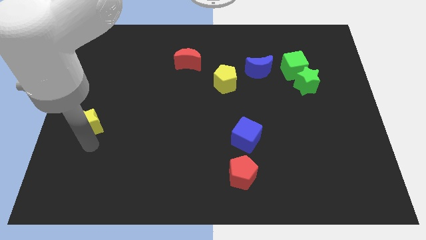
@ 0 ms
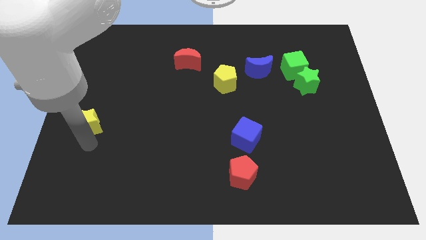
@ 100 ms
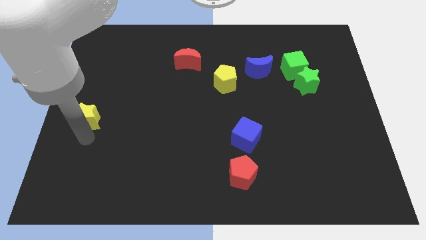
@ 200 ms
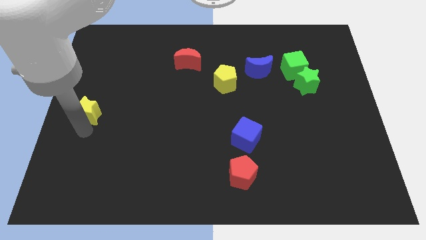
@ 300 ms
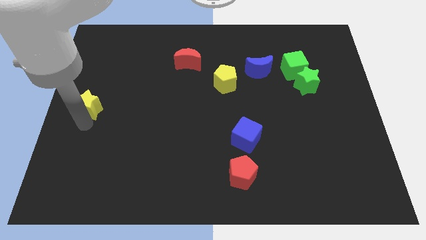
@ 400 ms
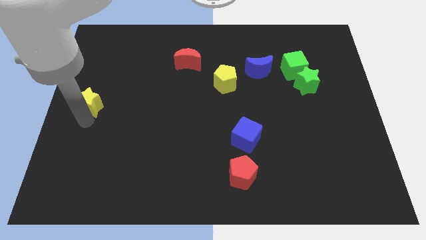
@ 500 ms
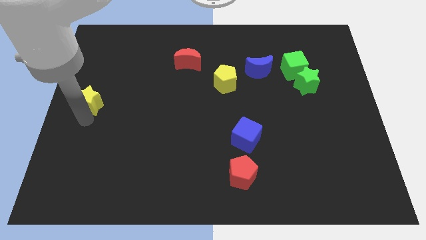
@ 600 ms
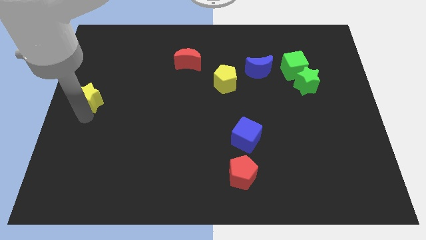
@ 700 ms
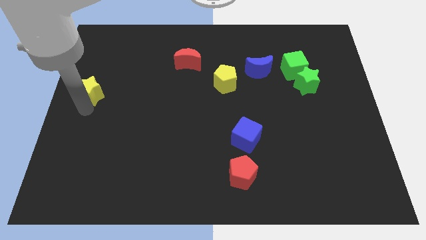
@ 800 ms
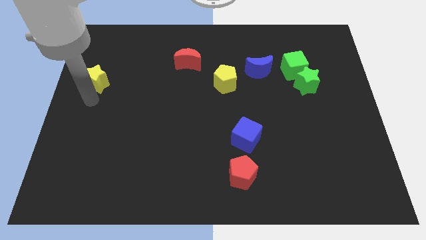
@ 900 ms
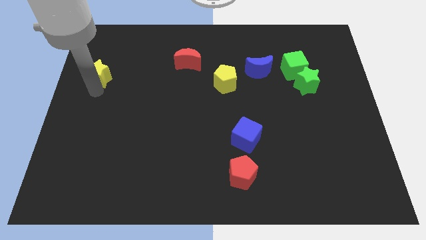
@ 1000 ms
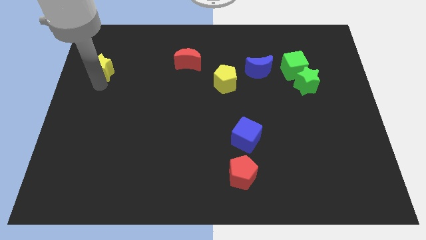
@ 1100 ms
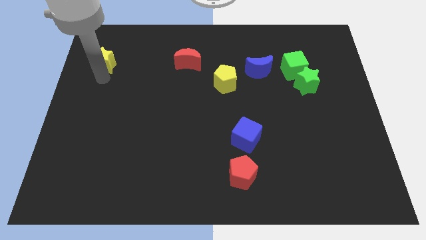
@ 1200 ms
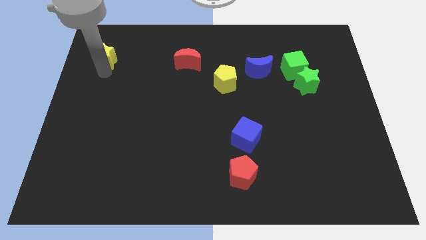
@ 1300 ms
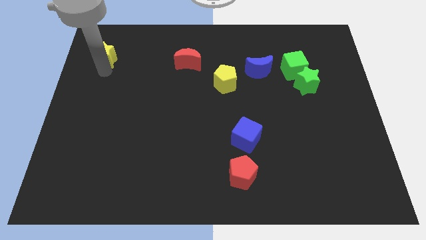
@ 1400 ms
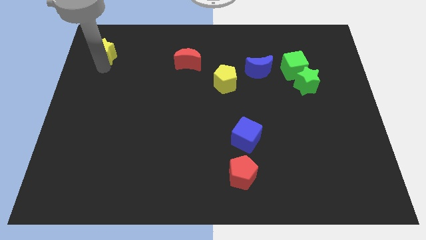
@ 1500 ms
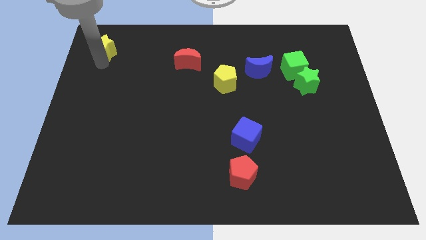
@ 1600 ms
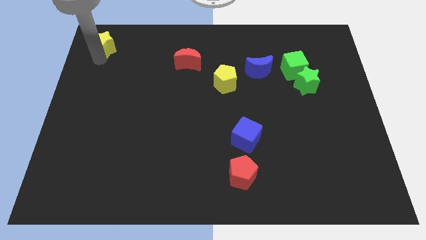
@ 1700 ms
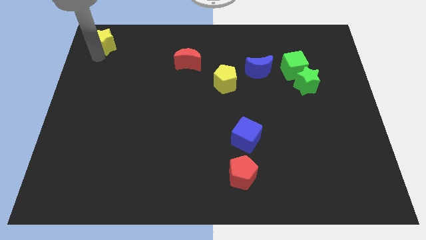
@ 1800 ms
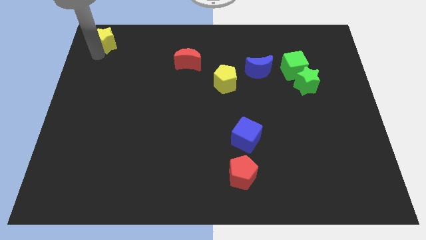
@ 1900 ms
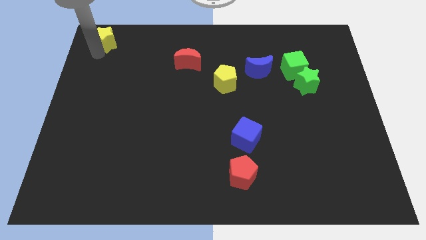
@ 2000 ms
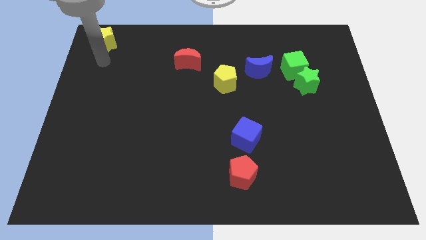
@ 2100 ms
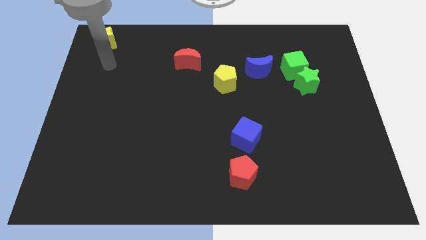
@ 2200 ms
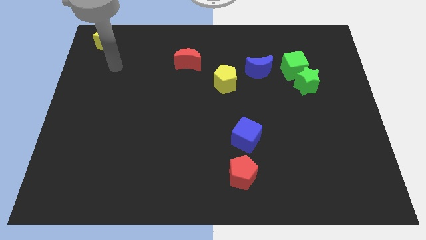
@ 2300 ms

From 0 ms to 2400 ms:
move yellow to the top right

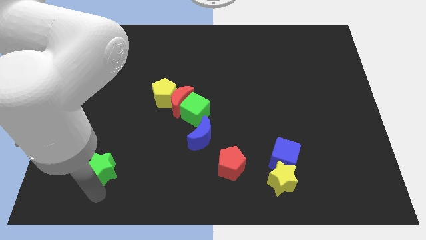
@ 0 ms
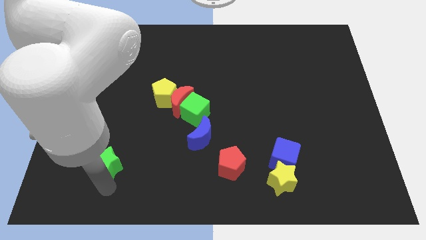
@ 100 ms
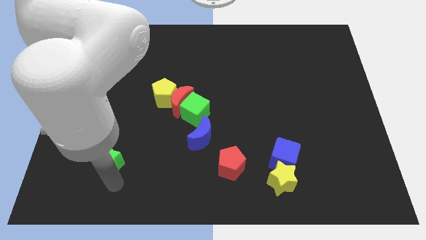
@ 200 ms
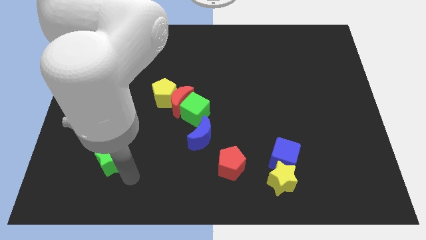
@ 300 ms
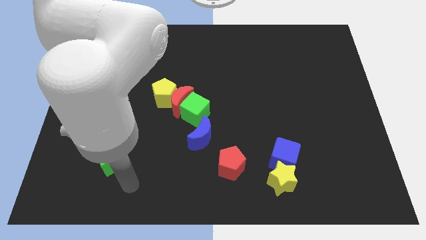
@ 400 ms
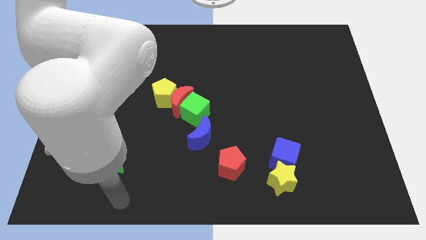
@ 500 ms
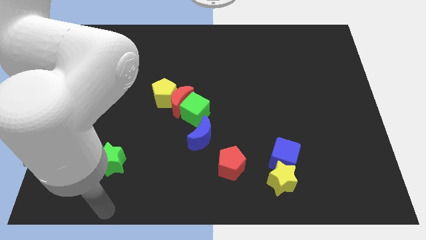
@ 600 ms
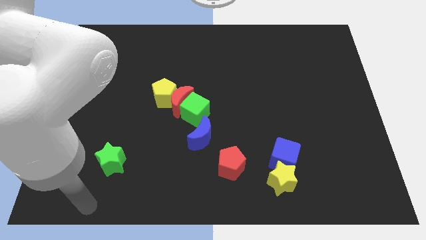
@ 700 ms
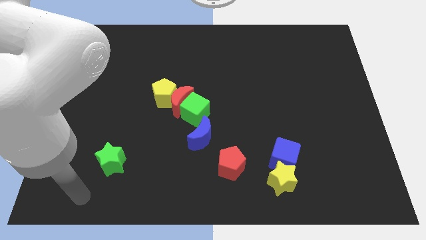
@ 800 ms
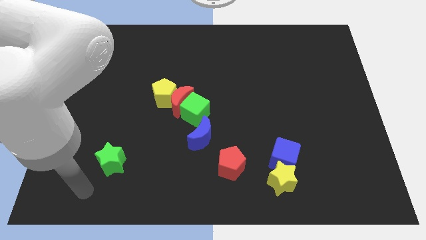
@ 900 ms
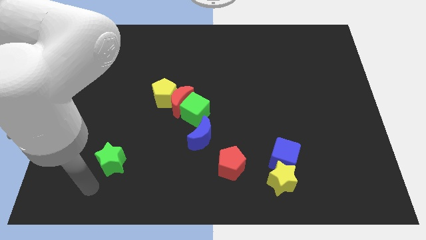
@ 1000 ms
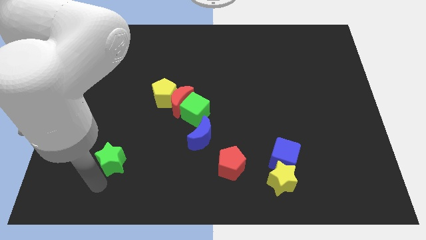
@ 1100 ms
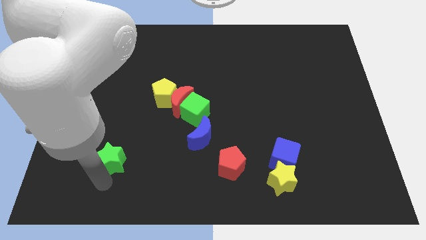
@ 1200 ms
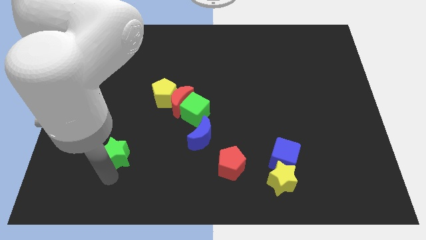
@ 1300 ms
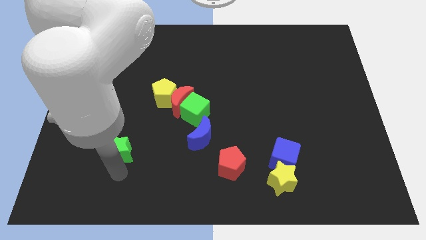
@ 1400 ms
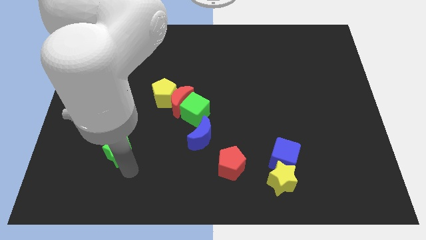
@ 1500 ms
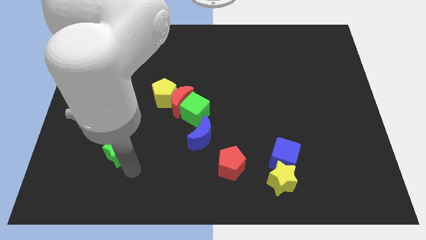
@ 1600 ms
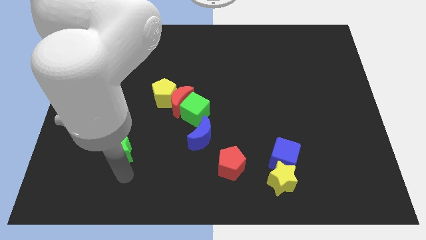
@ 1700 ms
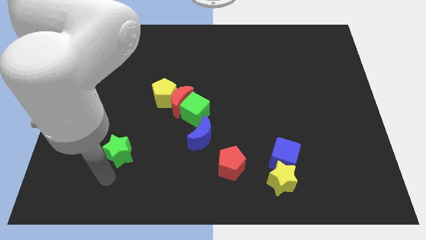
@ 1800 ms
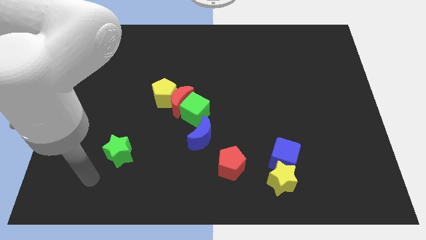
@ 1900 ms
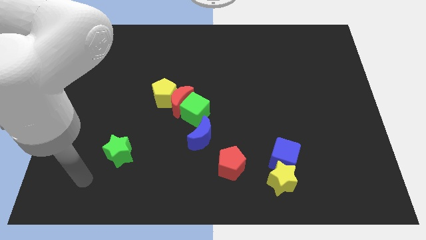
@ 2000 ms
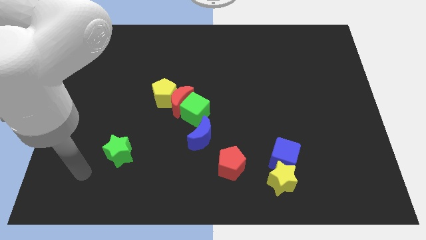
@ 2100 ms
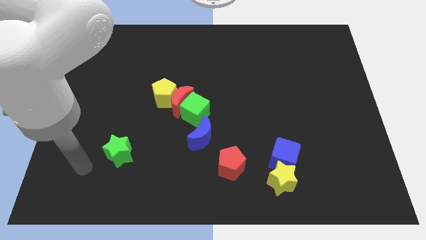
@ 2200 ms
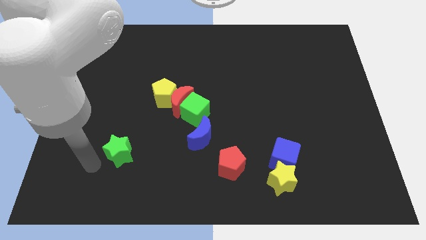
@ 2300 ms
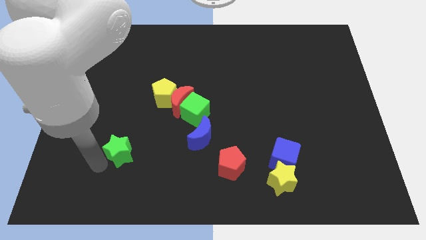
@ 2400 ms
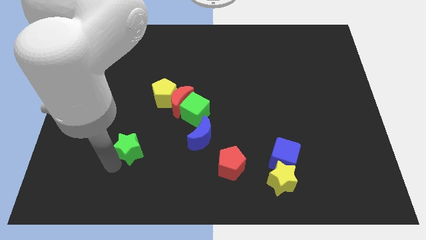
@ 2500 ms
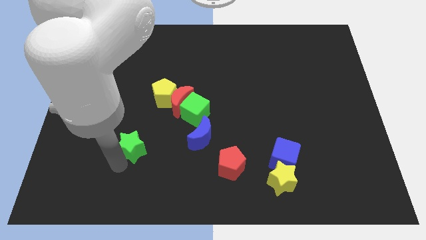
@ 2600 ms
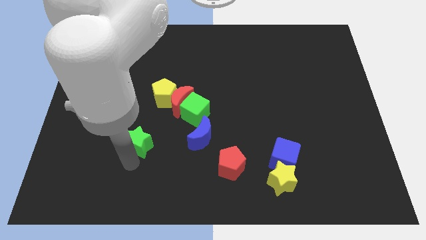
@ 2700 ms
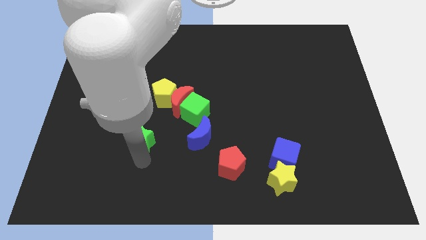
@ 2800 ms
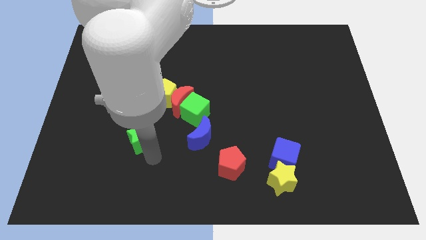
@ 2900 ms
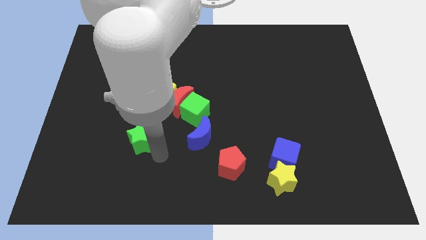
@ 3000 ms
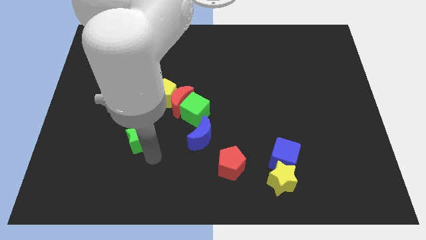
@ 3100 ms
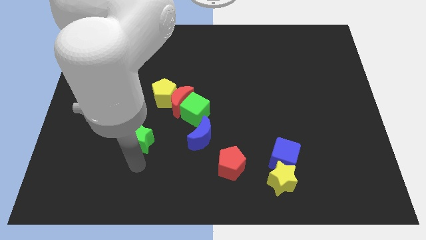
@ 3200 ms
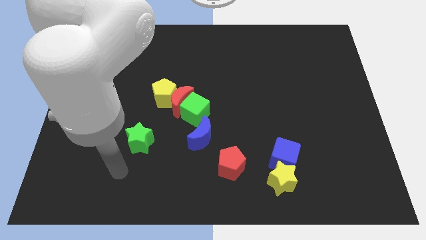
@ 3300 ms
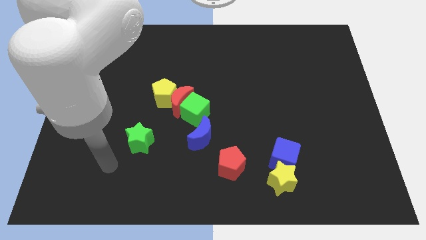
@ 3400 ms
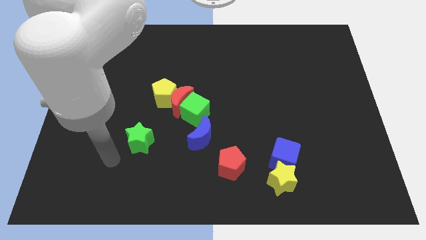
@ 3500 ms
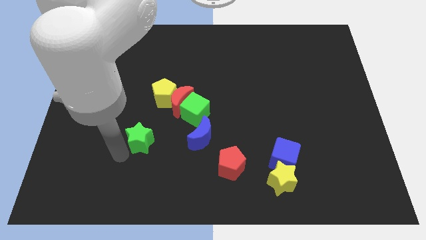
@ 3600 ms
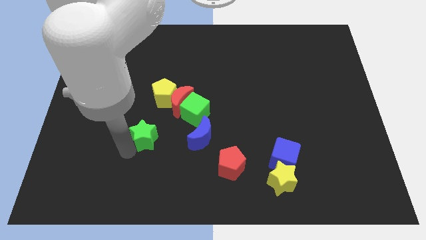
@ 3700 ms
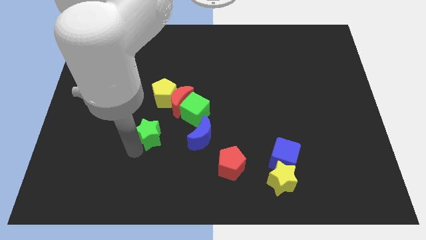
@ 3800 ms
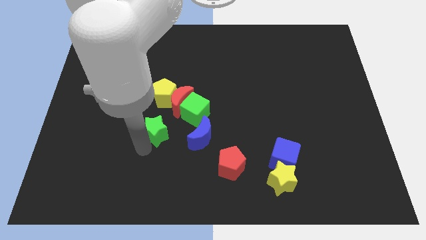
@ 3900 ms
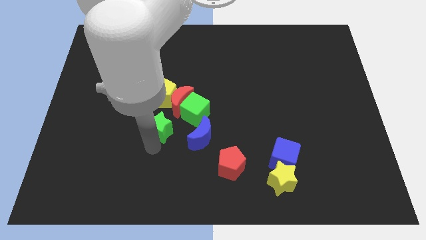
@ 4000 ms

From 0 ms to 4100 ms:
push green star below the yellow pentagon

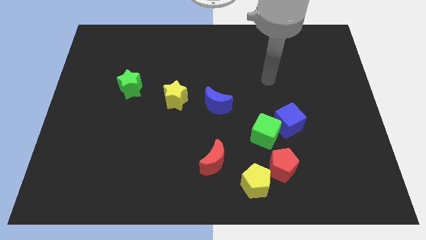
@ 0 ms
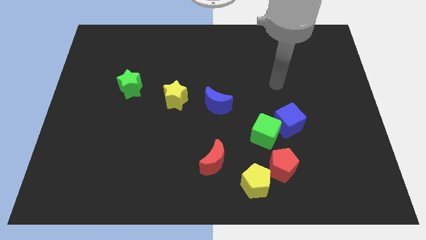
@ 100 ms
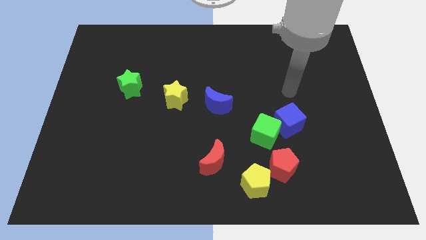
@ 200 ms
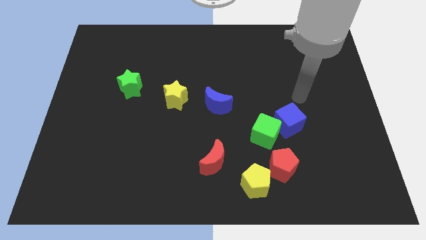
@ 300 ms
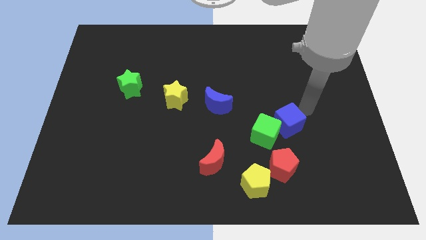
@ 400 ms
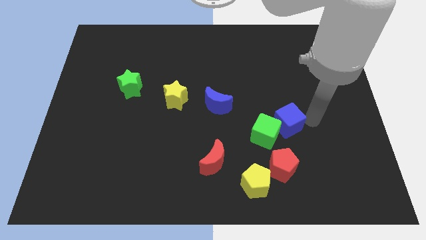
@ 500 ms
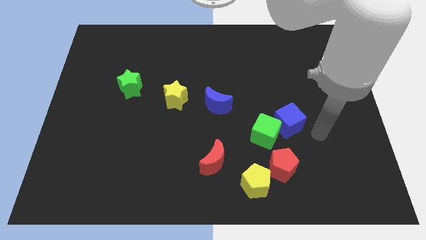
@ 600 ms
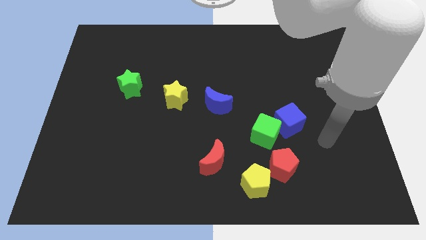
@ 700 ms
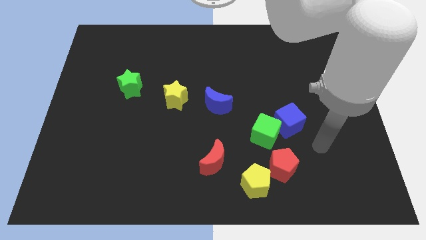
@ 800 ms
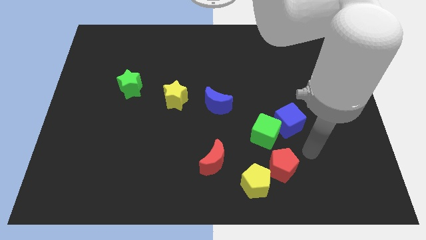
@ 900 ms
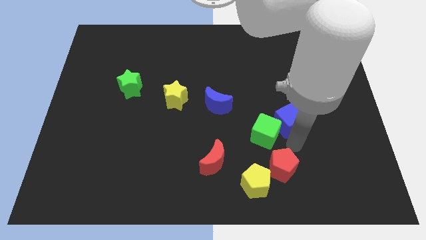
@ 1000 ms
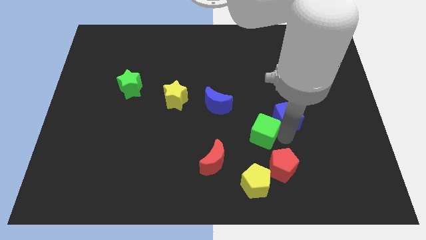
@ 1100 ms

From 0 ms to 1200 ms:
place your hand in between the blue cube and red pentagon

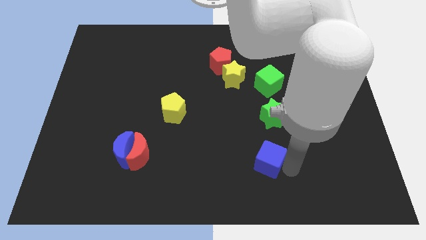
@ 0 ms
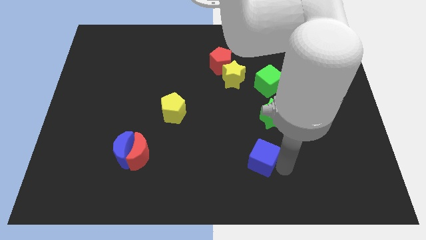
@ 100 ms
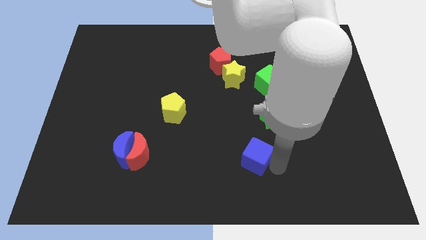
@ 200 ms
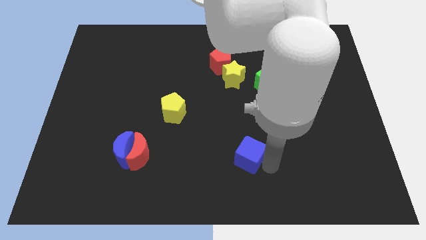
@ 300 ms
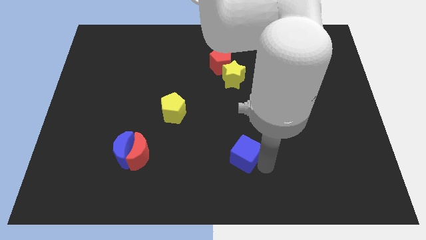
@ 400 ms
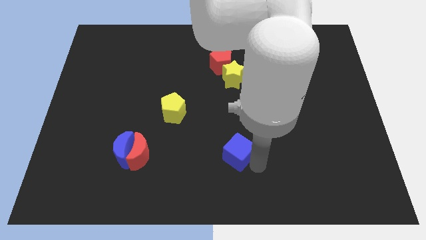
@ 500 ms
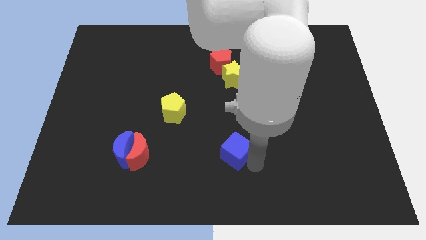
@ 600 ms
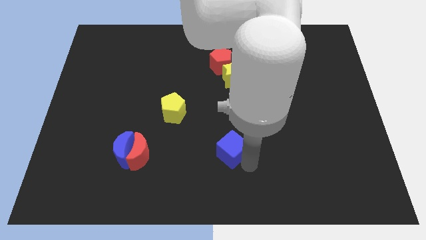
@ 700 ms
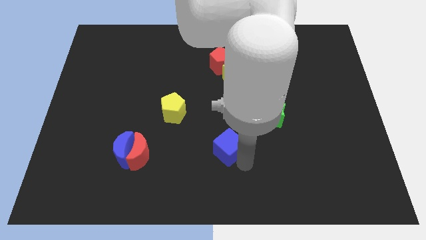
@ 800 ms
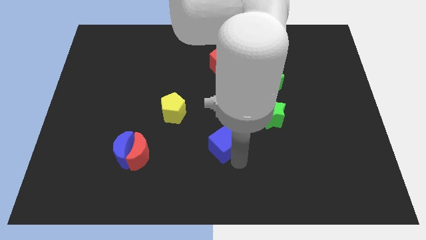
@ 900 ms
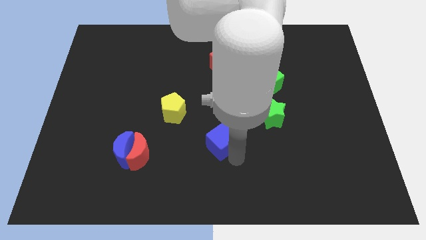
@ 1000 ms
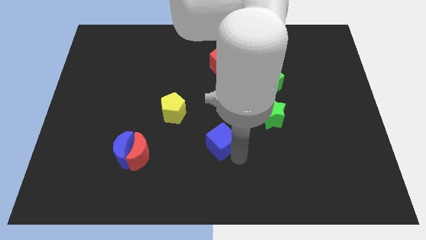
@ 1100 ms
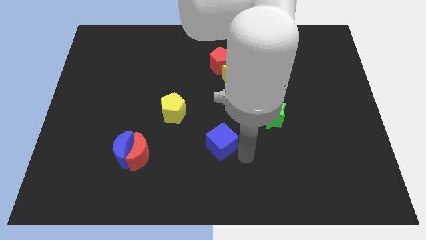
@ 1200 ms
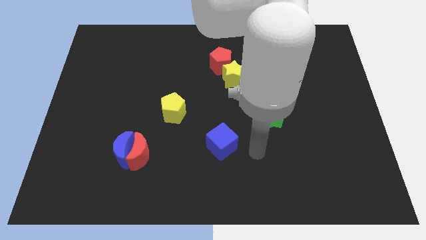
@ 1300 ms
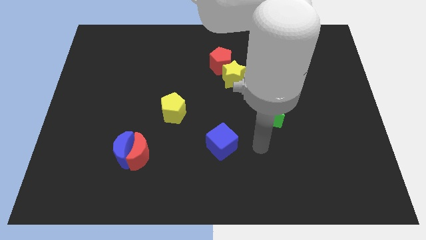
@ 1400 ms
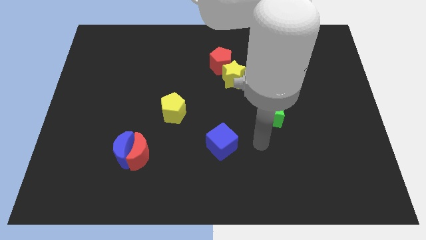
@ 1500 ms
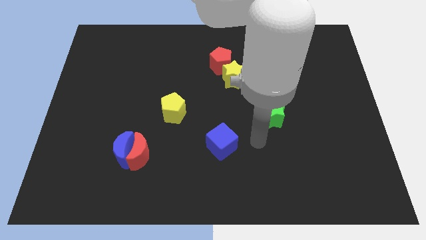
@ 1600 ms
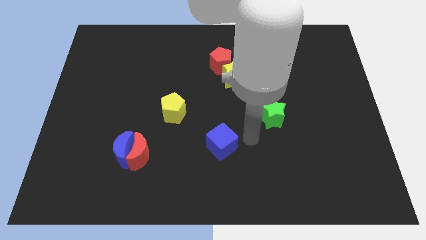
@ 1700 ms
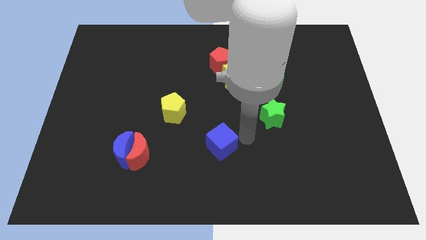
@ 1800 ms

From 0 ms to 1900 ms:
push the blue cube towards the center of the board
